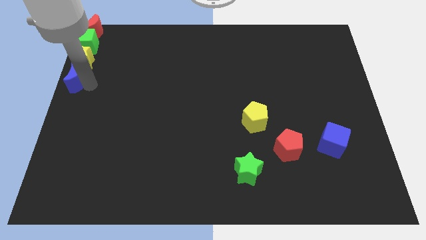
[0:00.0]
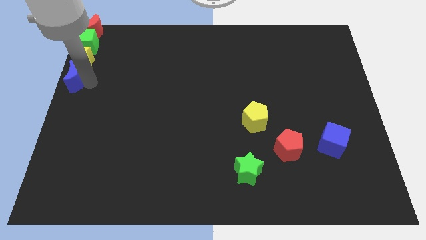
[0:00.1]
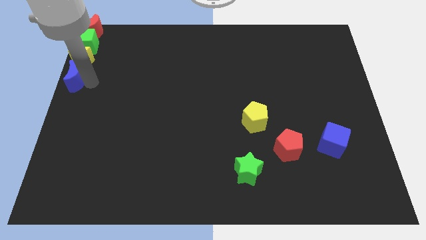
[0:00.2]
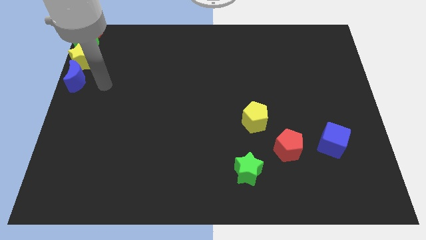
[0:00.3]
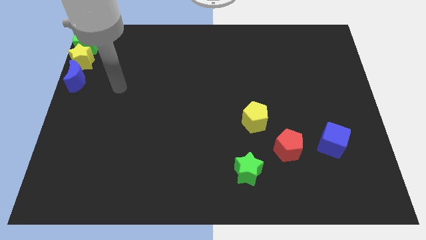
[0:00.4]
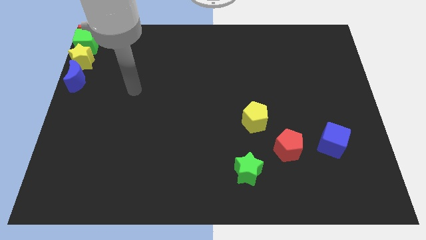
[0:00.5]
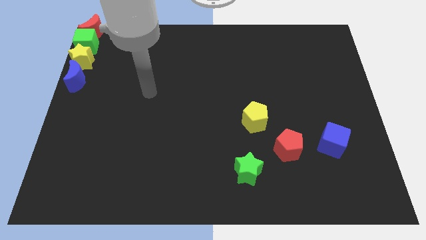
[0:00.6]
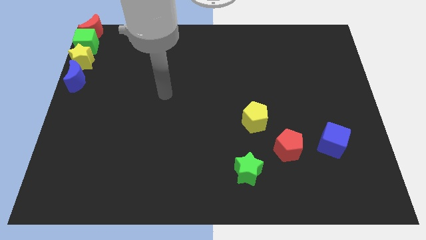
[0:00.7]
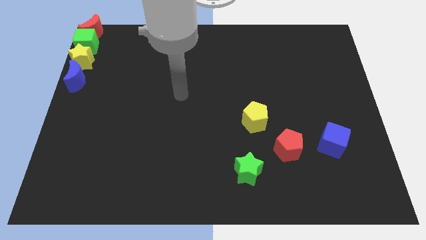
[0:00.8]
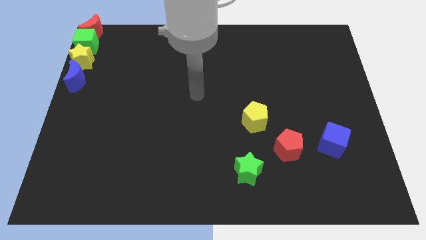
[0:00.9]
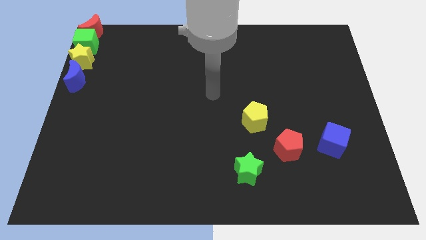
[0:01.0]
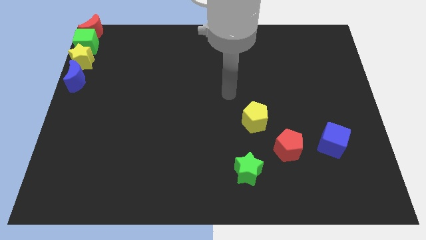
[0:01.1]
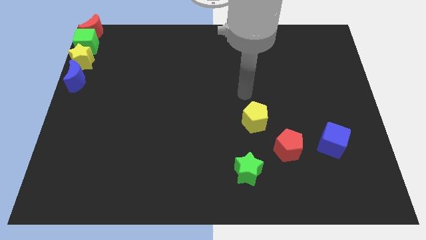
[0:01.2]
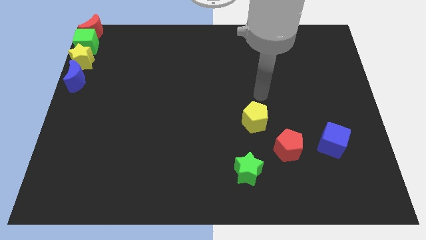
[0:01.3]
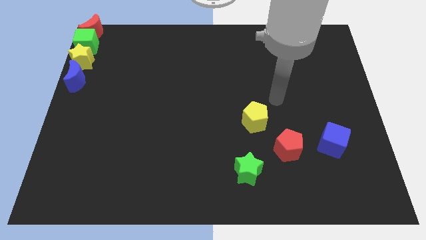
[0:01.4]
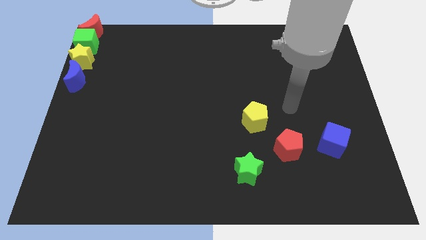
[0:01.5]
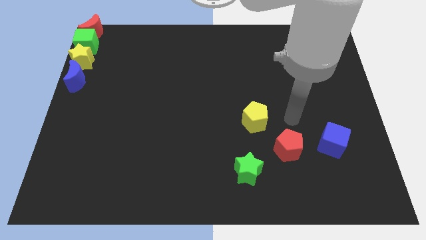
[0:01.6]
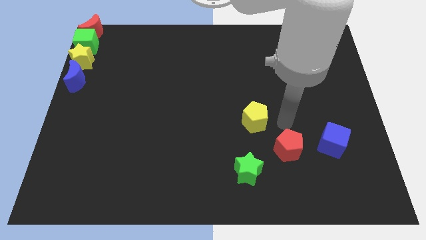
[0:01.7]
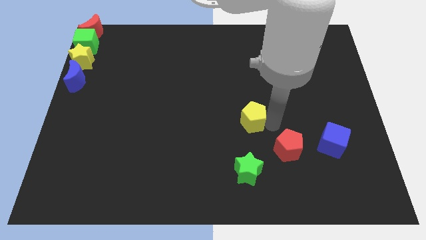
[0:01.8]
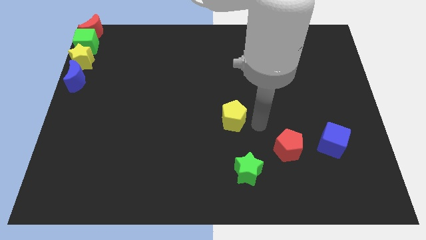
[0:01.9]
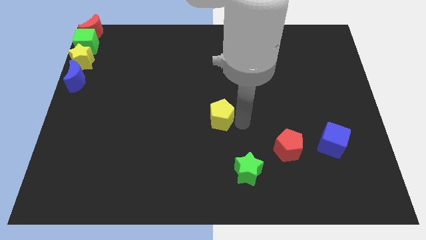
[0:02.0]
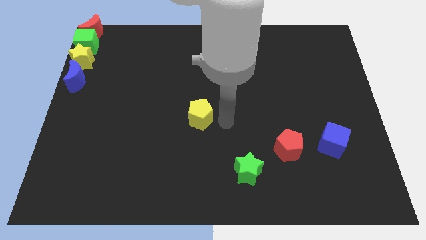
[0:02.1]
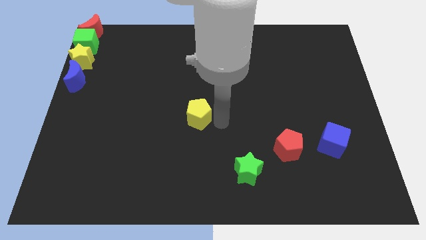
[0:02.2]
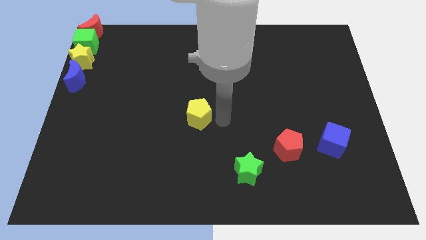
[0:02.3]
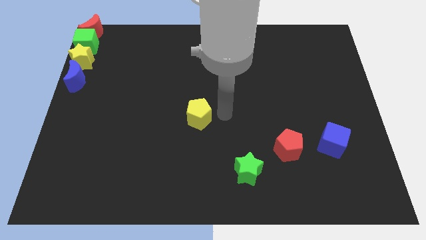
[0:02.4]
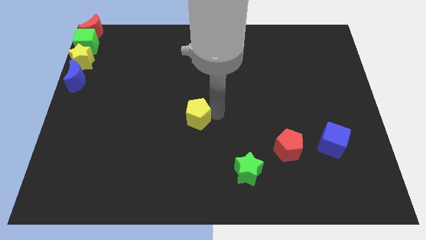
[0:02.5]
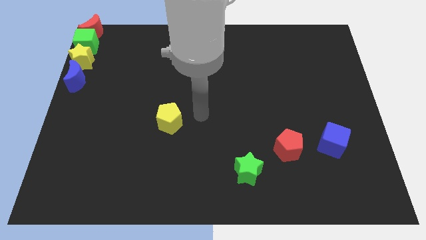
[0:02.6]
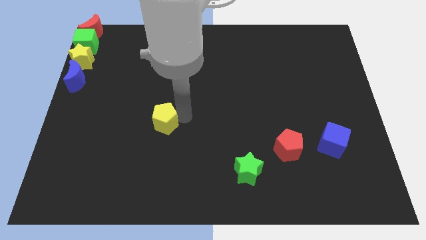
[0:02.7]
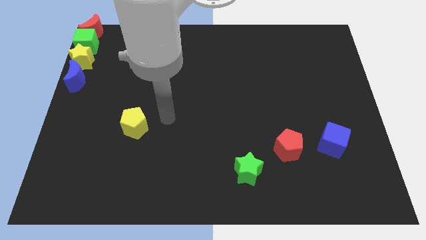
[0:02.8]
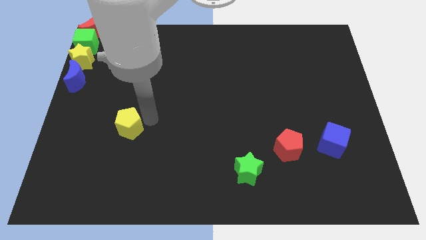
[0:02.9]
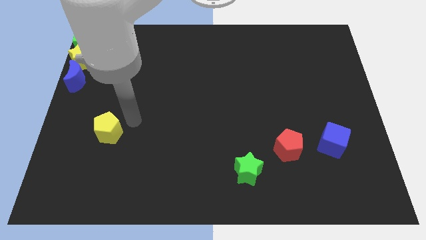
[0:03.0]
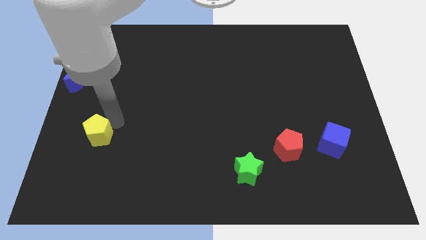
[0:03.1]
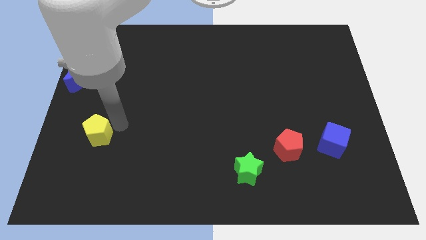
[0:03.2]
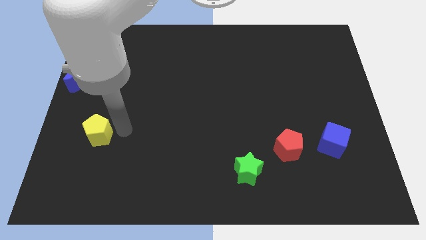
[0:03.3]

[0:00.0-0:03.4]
push the yellow pentagon towards the left side of the board

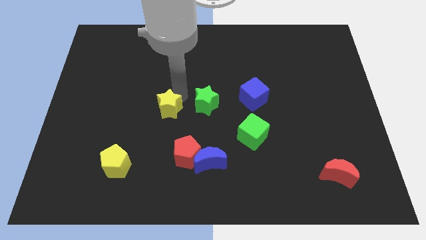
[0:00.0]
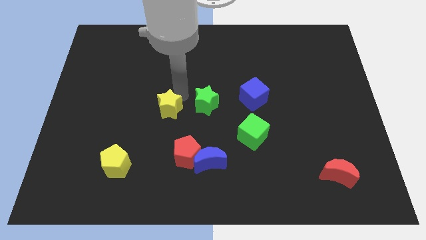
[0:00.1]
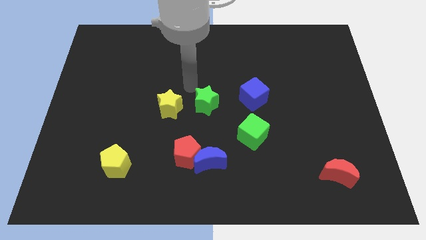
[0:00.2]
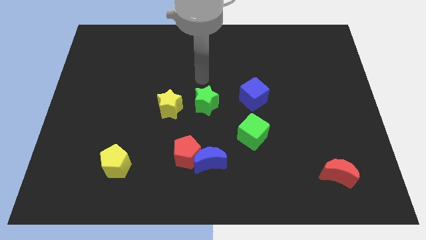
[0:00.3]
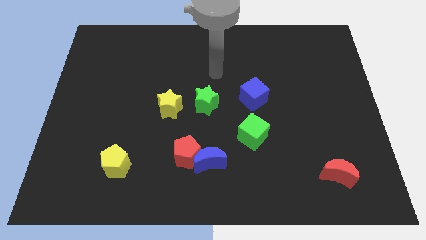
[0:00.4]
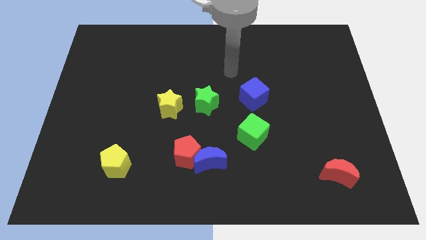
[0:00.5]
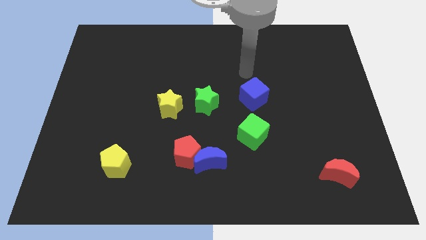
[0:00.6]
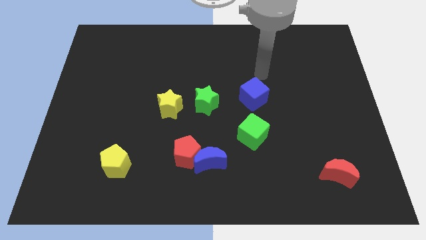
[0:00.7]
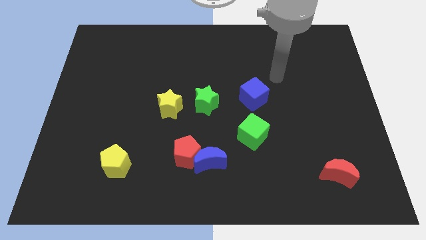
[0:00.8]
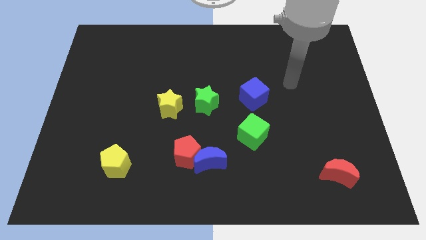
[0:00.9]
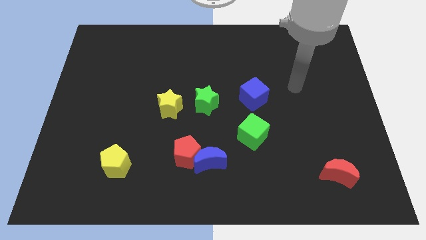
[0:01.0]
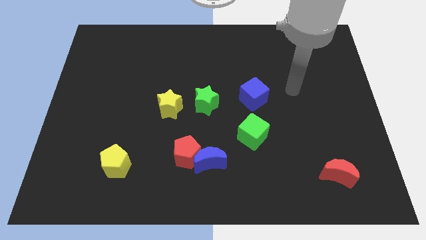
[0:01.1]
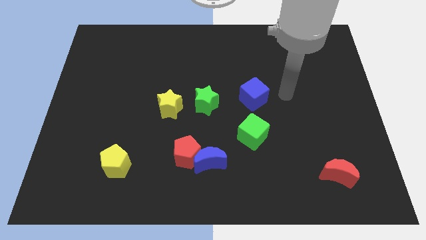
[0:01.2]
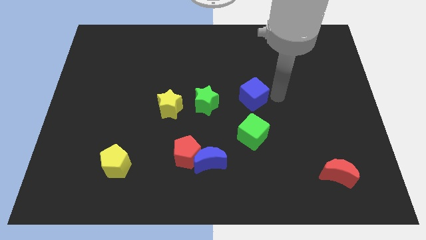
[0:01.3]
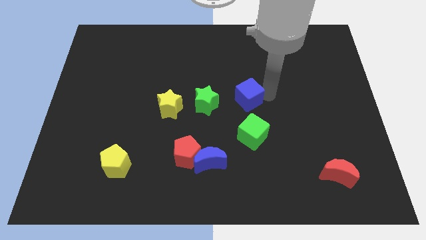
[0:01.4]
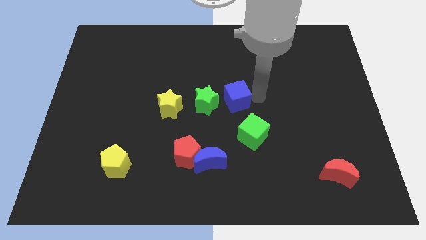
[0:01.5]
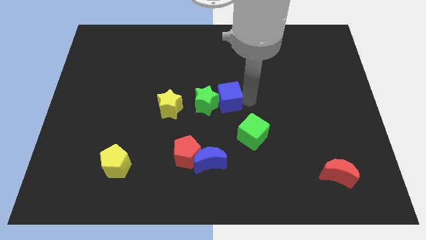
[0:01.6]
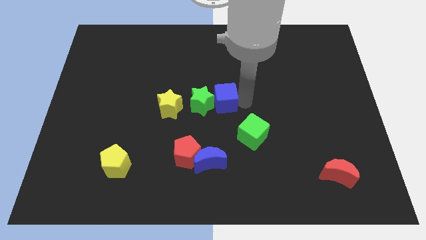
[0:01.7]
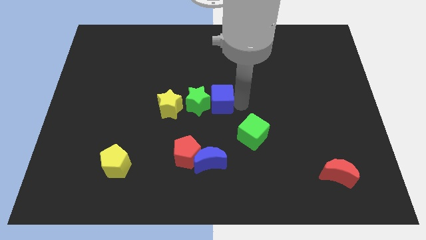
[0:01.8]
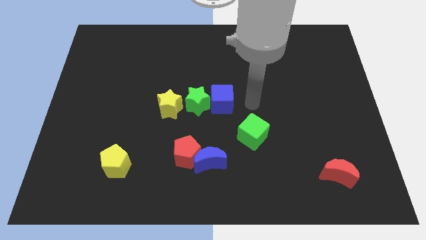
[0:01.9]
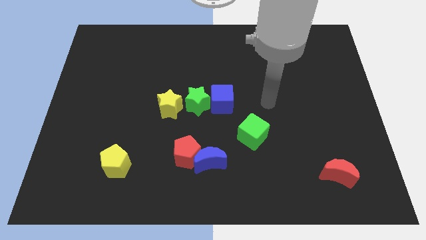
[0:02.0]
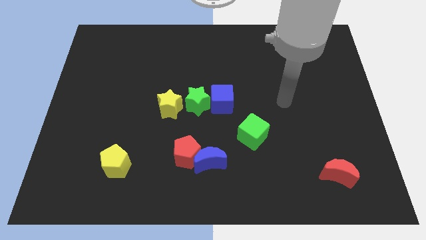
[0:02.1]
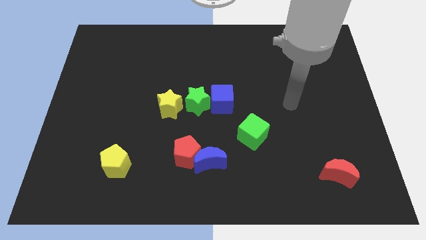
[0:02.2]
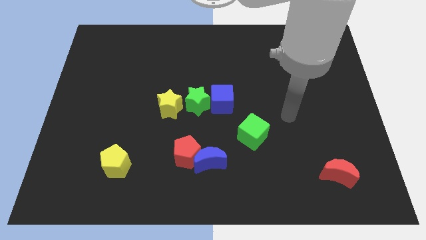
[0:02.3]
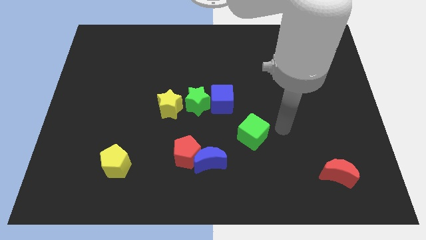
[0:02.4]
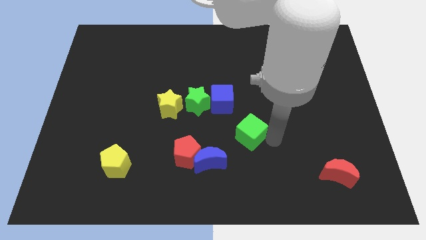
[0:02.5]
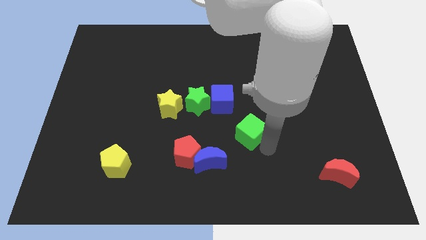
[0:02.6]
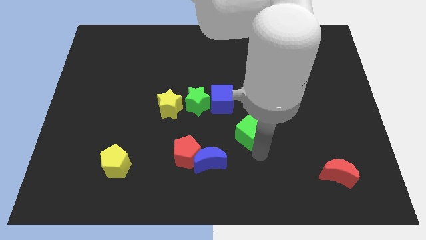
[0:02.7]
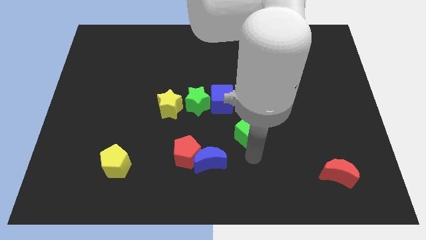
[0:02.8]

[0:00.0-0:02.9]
move the blue cube close to the green star

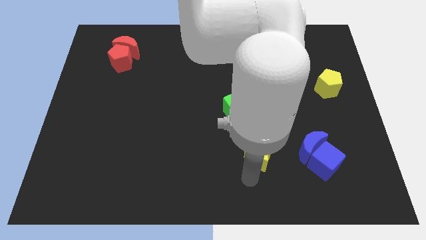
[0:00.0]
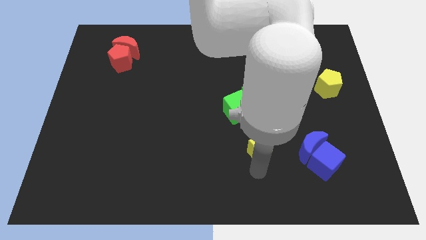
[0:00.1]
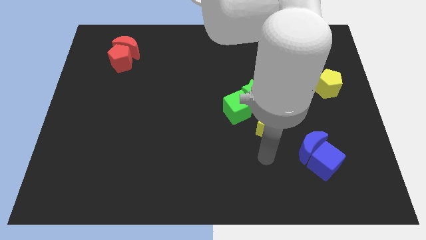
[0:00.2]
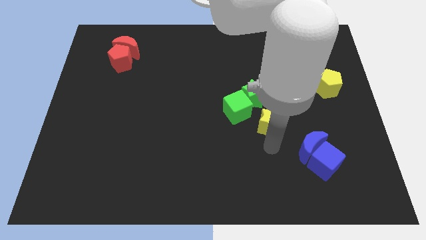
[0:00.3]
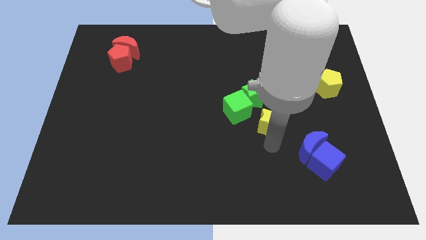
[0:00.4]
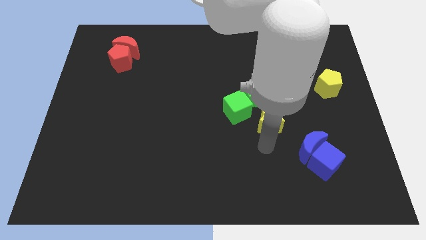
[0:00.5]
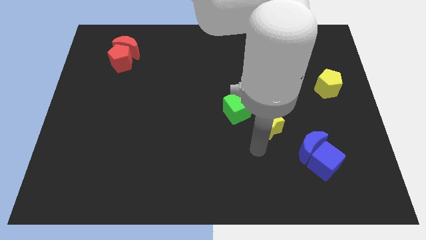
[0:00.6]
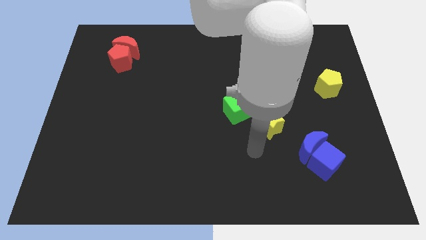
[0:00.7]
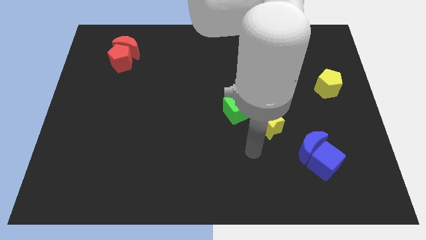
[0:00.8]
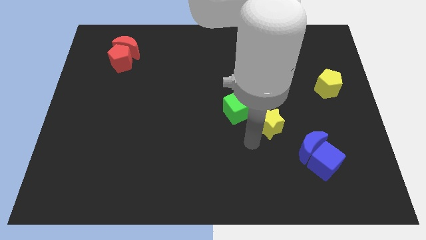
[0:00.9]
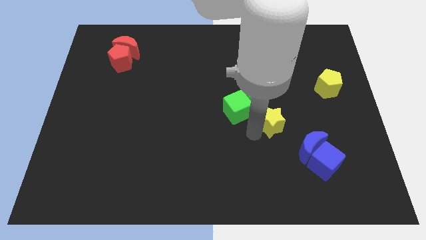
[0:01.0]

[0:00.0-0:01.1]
push the yellow star towards the green star

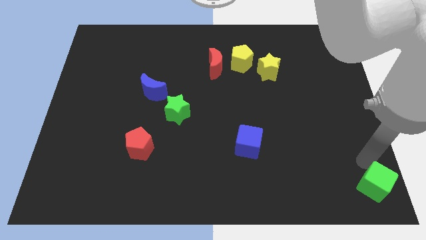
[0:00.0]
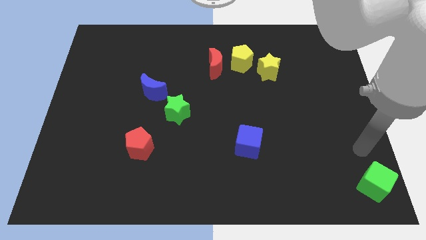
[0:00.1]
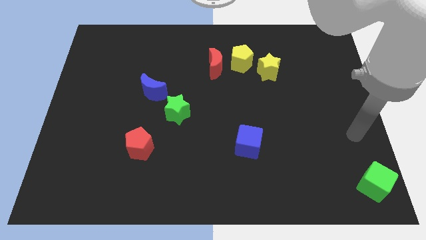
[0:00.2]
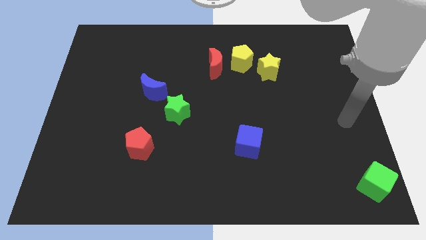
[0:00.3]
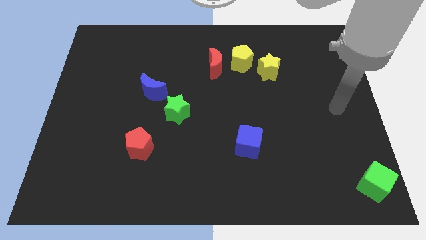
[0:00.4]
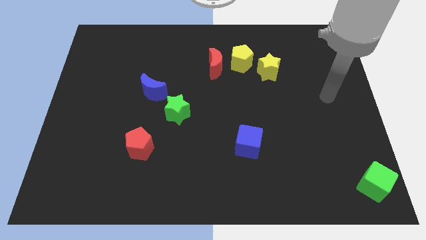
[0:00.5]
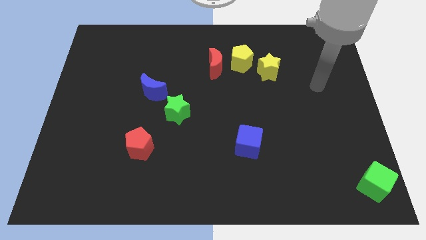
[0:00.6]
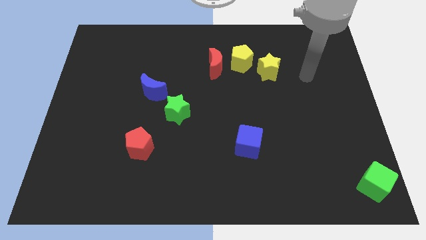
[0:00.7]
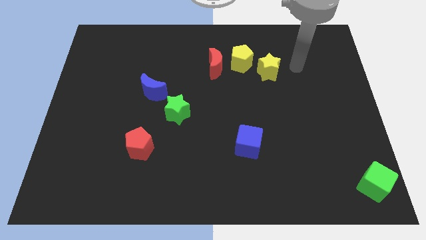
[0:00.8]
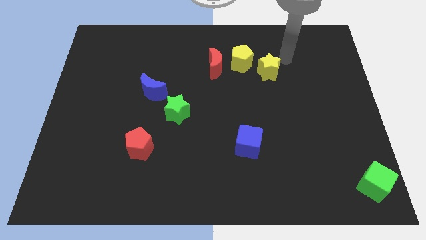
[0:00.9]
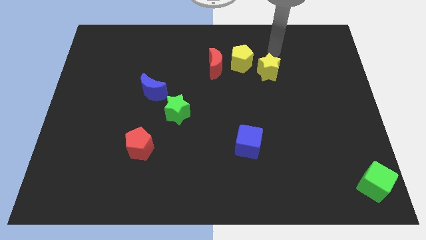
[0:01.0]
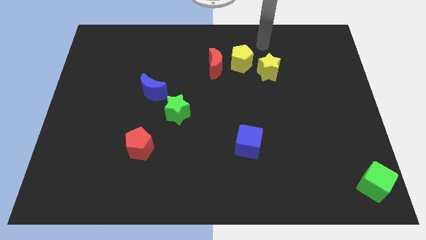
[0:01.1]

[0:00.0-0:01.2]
place your arm vertically above the yellow star

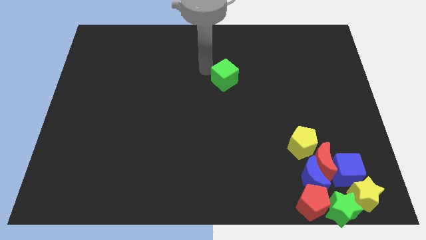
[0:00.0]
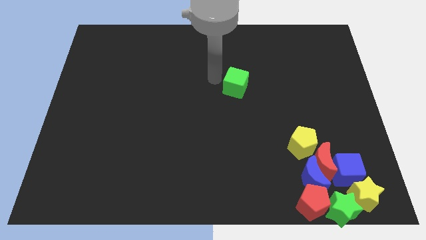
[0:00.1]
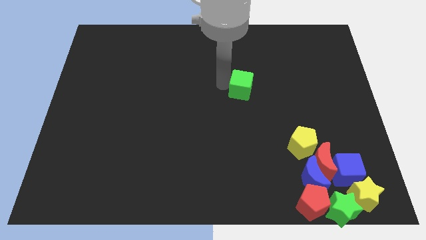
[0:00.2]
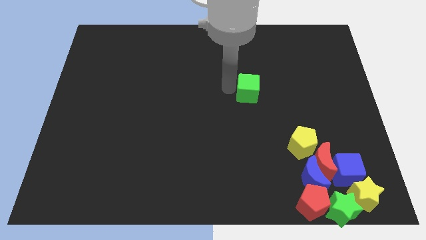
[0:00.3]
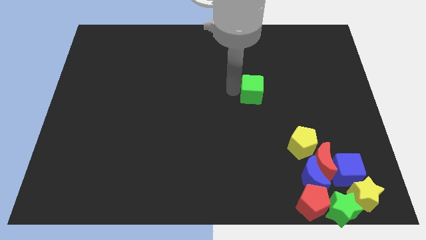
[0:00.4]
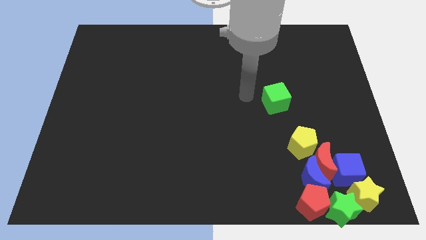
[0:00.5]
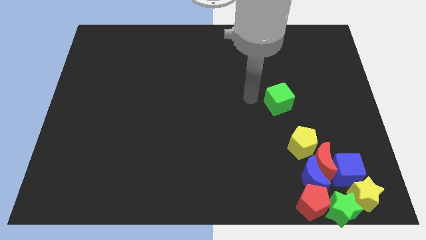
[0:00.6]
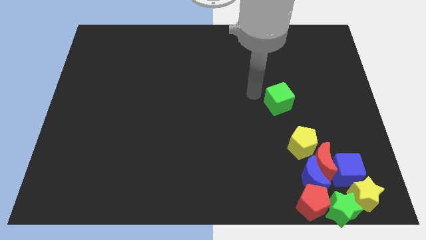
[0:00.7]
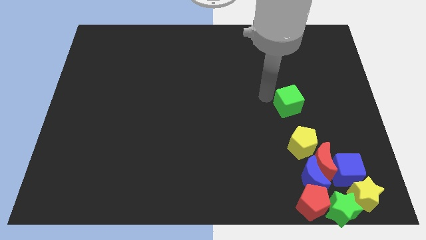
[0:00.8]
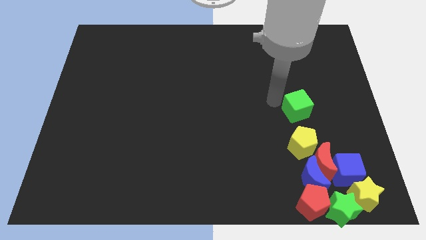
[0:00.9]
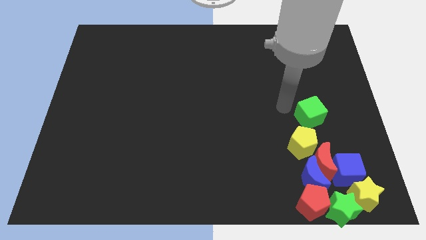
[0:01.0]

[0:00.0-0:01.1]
place the green cube above the yellow pentagon
